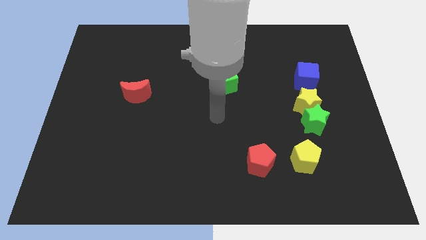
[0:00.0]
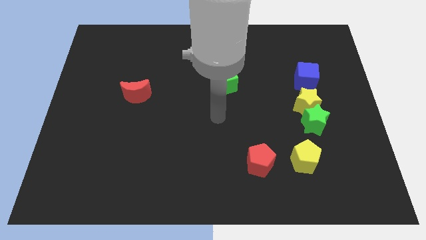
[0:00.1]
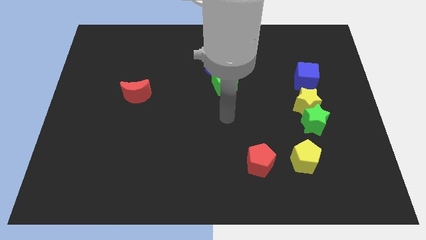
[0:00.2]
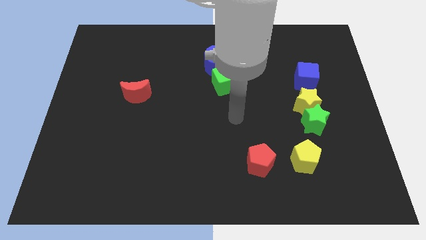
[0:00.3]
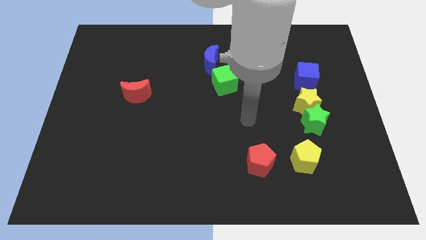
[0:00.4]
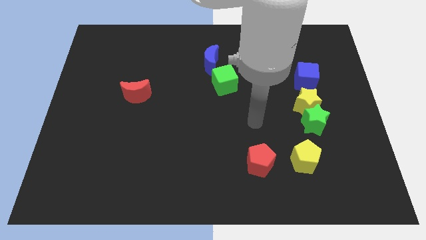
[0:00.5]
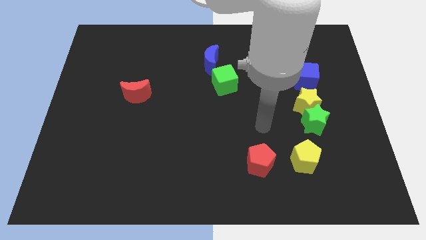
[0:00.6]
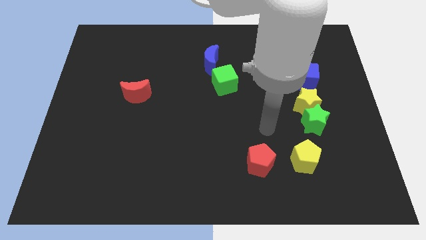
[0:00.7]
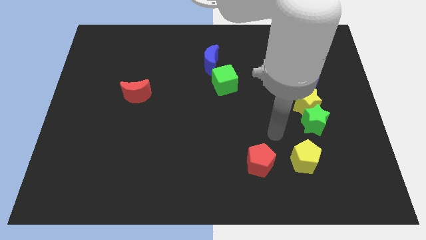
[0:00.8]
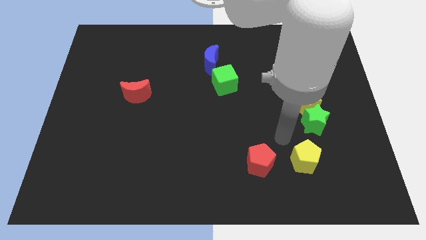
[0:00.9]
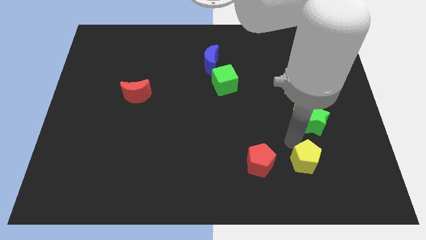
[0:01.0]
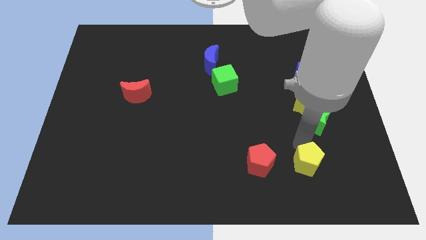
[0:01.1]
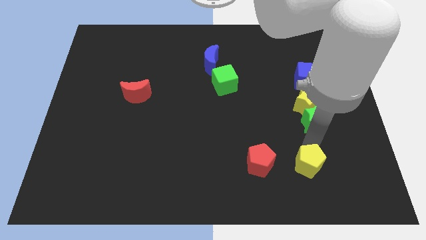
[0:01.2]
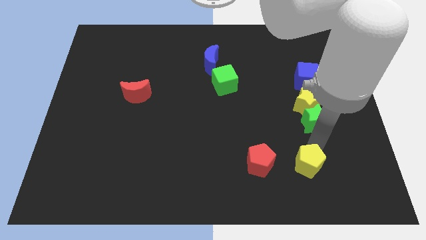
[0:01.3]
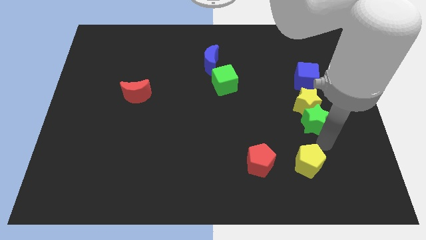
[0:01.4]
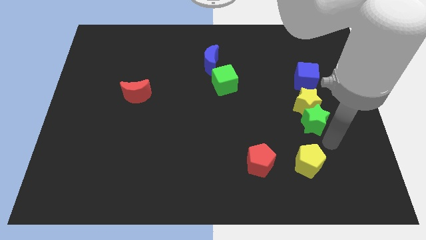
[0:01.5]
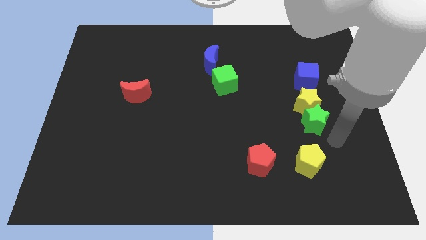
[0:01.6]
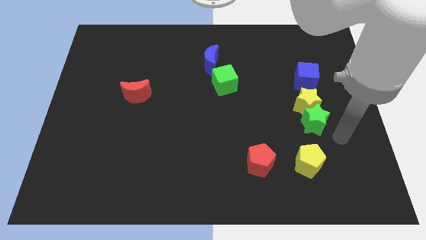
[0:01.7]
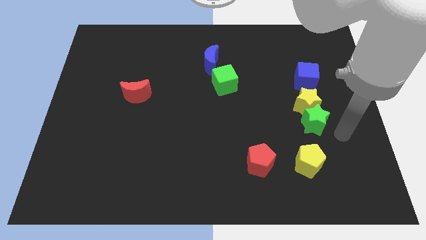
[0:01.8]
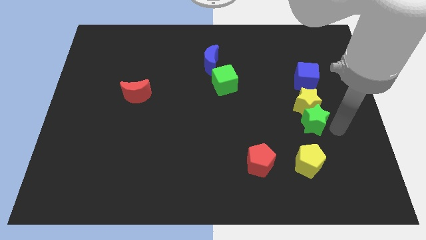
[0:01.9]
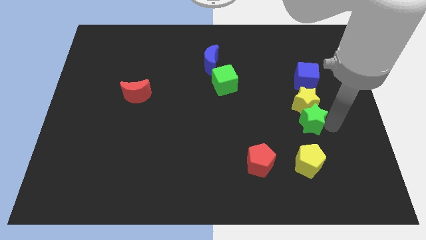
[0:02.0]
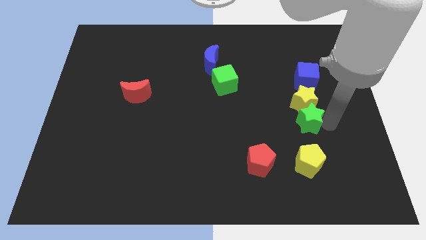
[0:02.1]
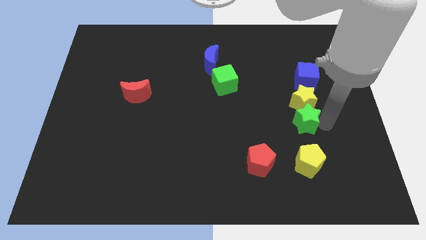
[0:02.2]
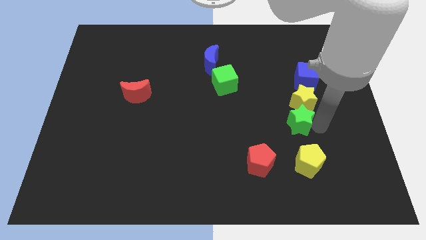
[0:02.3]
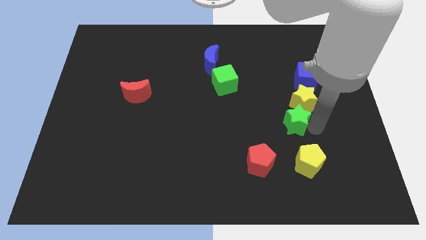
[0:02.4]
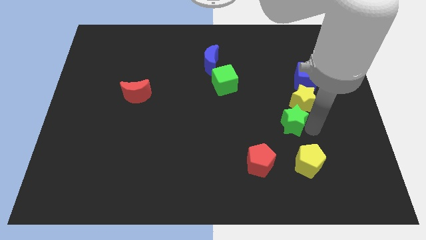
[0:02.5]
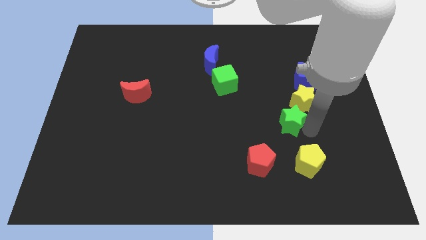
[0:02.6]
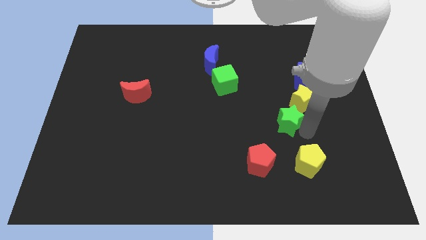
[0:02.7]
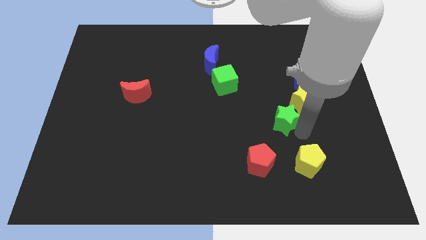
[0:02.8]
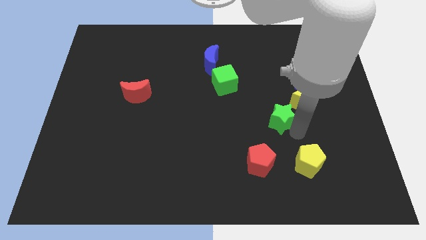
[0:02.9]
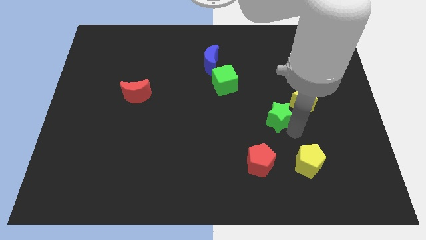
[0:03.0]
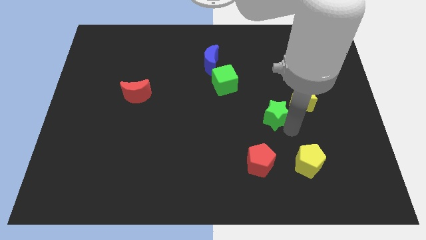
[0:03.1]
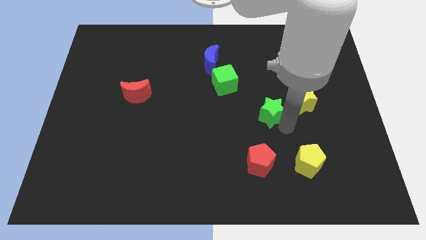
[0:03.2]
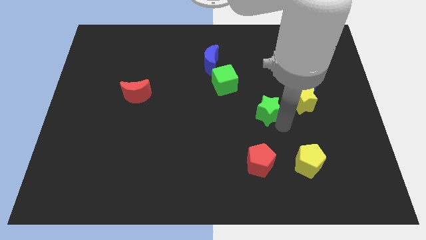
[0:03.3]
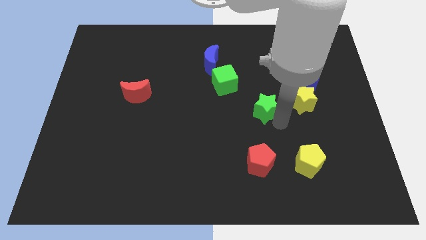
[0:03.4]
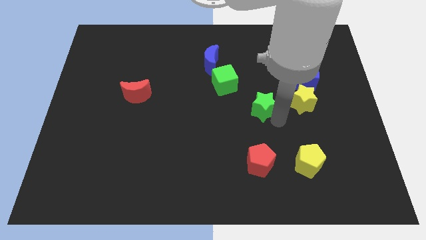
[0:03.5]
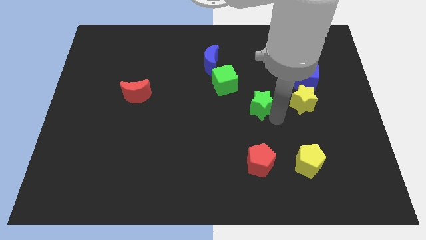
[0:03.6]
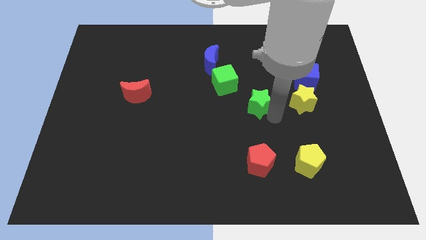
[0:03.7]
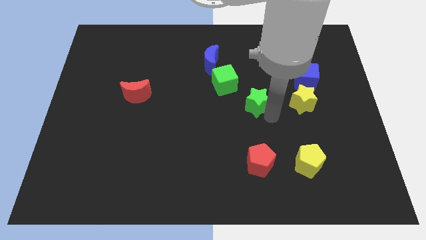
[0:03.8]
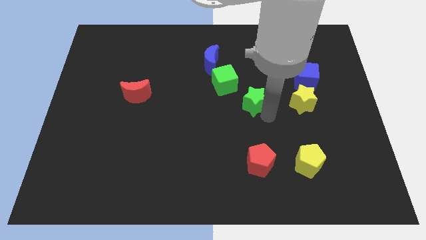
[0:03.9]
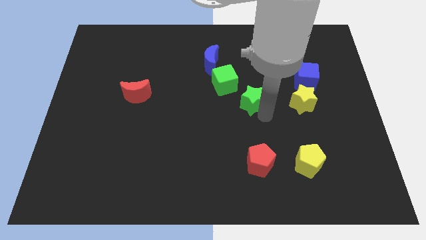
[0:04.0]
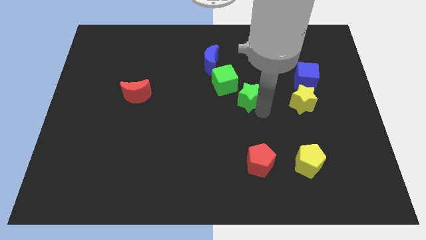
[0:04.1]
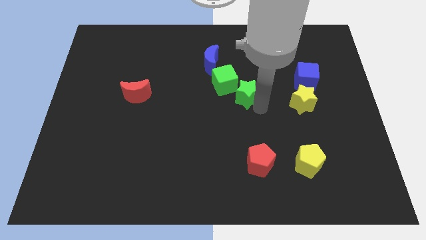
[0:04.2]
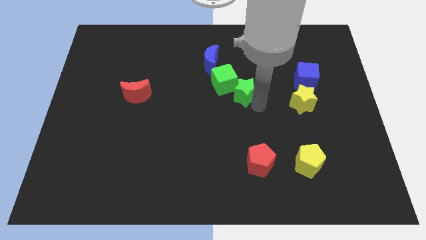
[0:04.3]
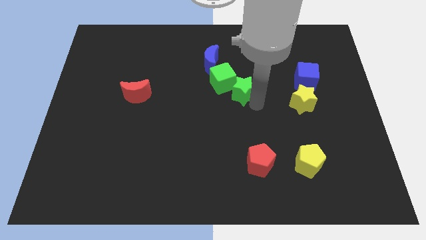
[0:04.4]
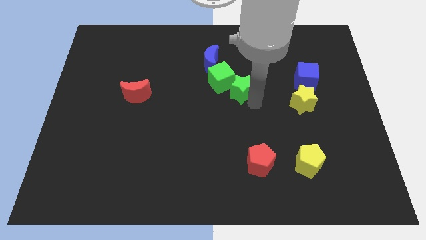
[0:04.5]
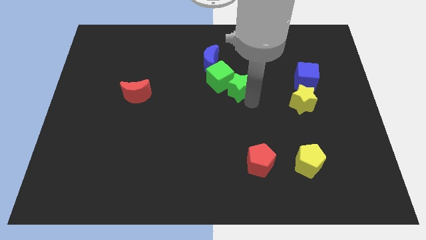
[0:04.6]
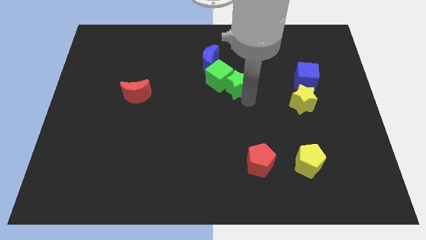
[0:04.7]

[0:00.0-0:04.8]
put the green star next to the green cube

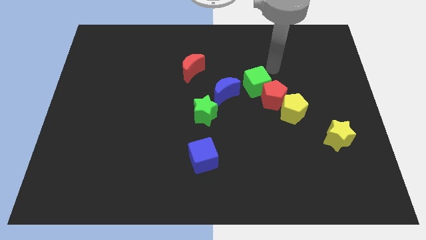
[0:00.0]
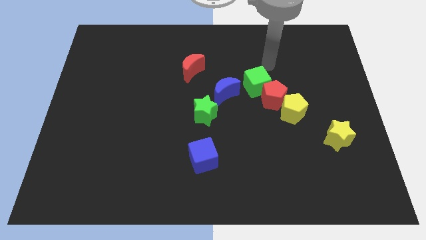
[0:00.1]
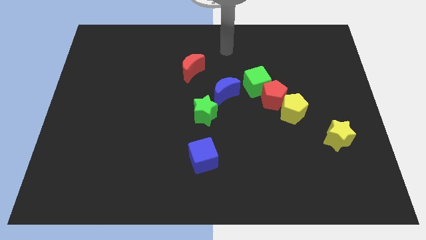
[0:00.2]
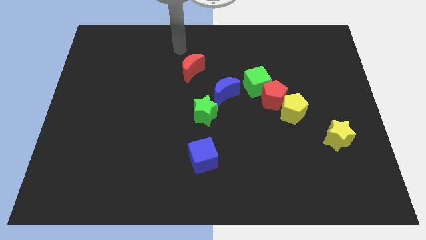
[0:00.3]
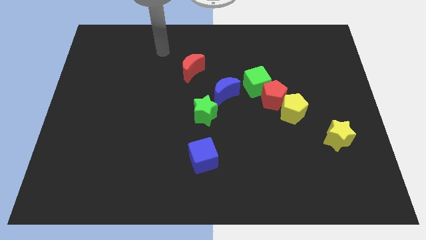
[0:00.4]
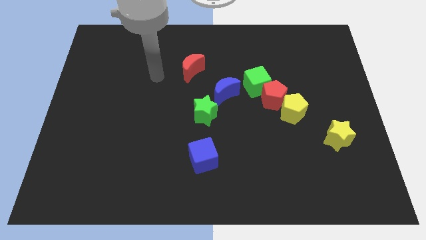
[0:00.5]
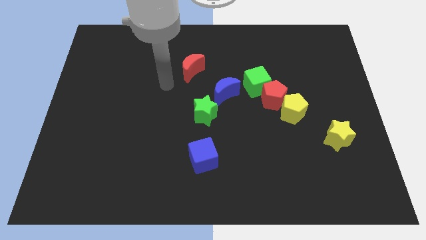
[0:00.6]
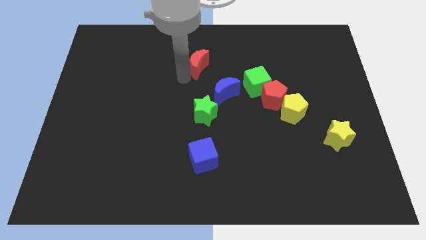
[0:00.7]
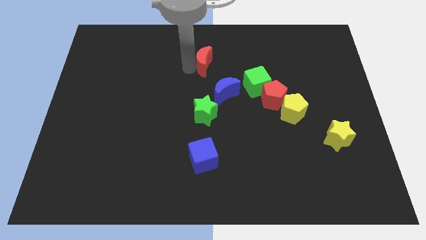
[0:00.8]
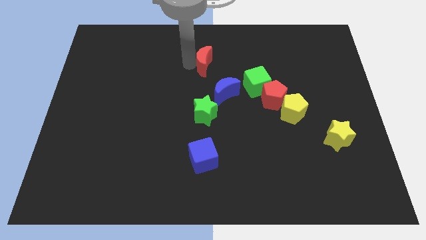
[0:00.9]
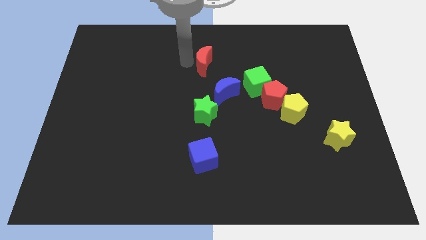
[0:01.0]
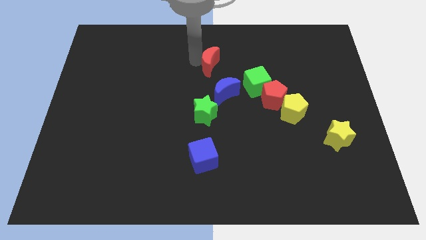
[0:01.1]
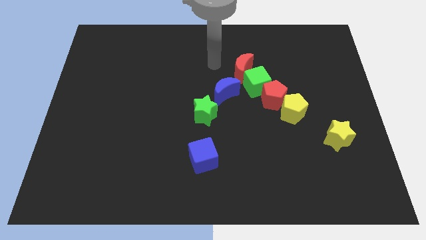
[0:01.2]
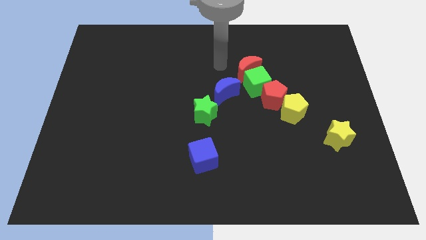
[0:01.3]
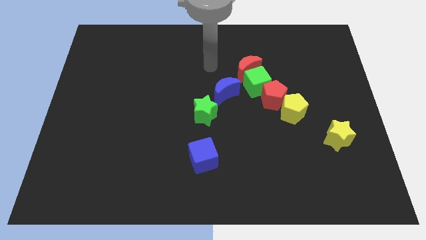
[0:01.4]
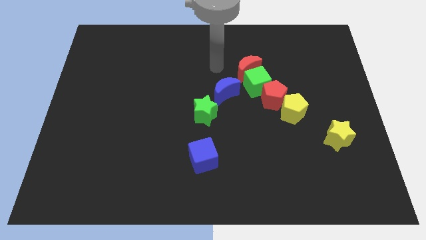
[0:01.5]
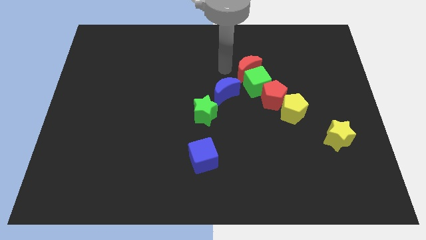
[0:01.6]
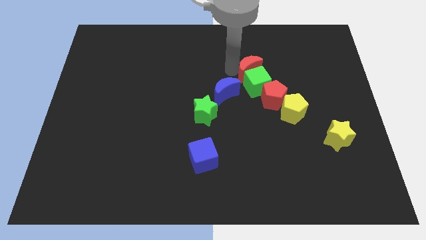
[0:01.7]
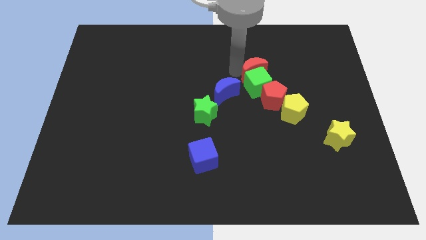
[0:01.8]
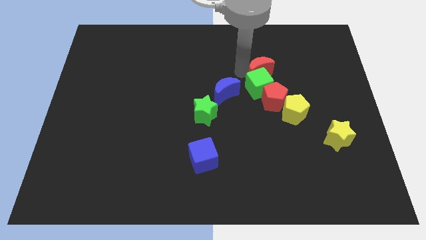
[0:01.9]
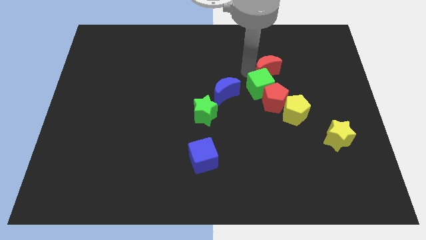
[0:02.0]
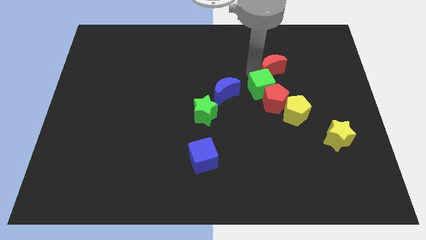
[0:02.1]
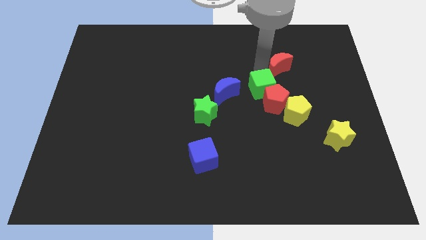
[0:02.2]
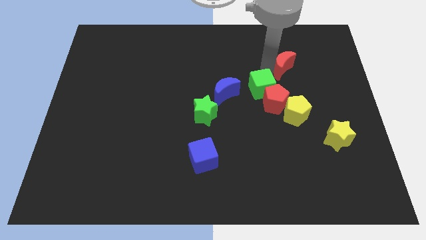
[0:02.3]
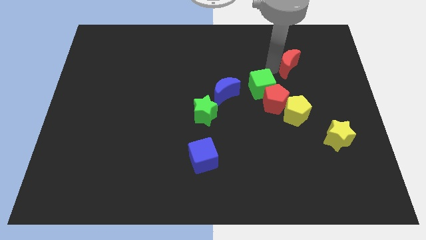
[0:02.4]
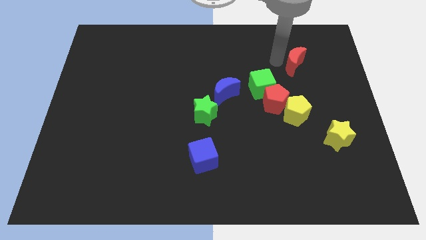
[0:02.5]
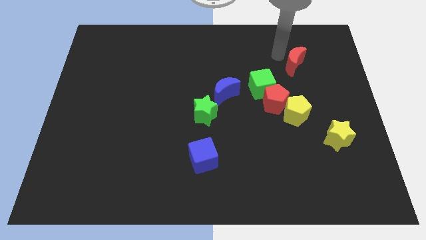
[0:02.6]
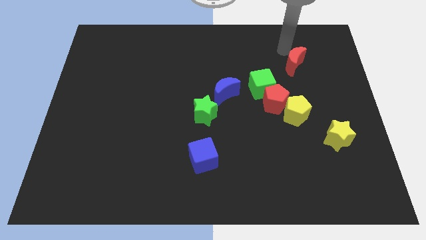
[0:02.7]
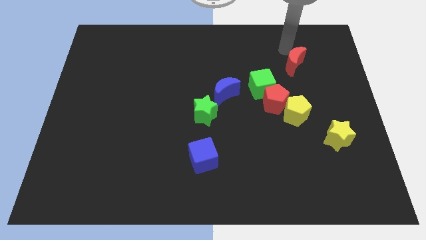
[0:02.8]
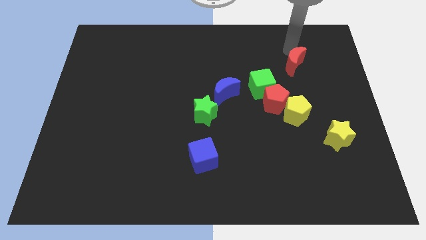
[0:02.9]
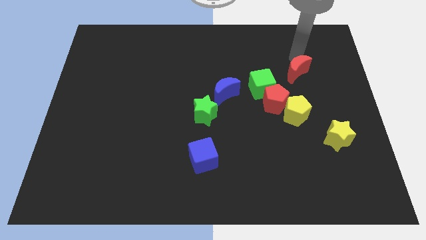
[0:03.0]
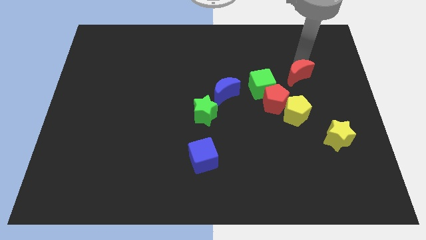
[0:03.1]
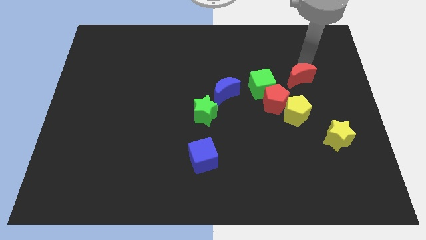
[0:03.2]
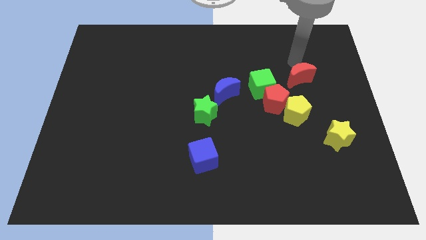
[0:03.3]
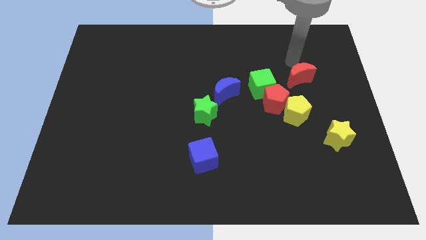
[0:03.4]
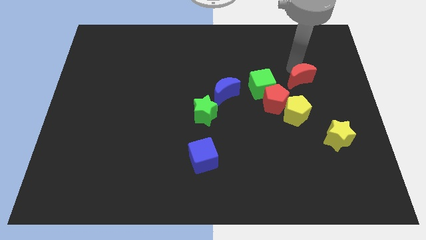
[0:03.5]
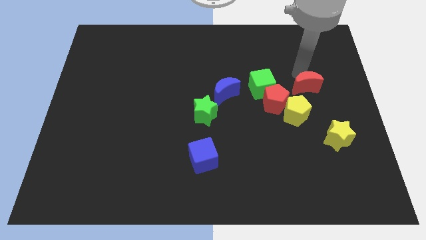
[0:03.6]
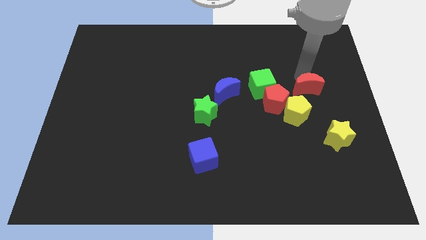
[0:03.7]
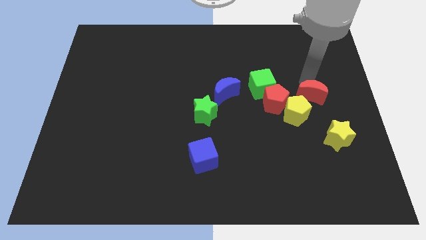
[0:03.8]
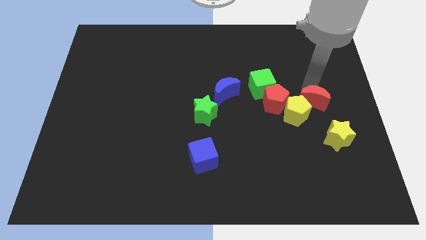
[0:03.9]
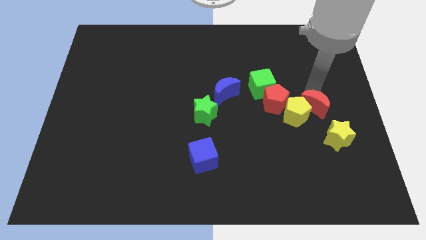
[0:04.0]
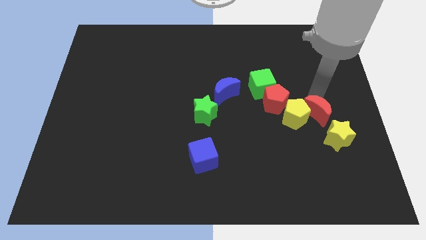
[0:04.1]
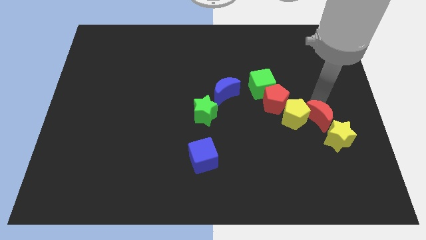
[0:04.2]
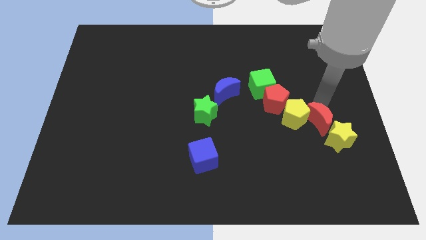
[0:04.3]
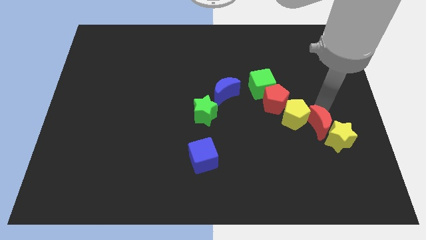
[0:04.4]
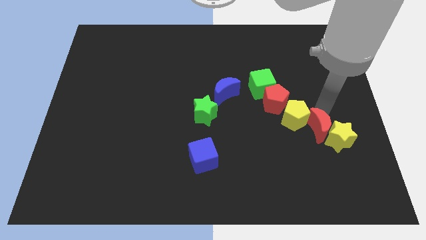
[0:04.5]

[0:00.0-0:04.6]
move the red moon next to the yellow star
